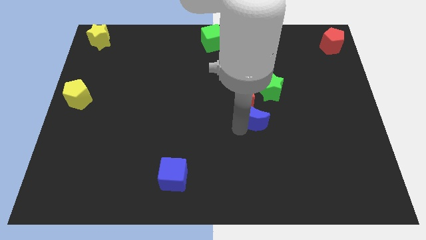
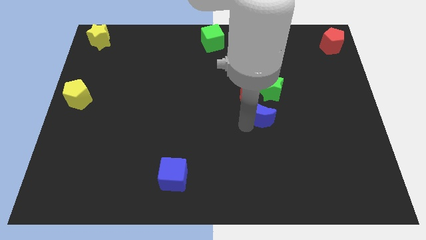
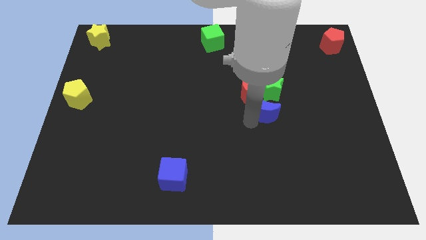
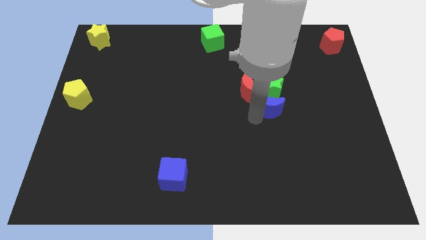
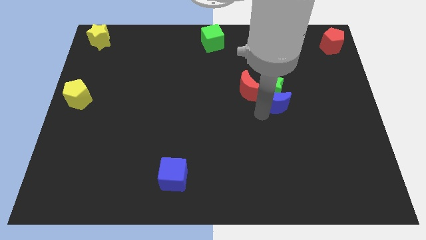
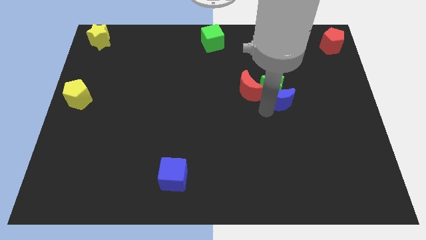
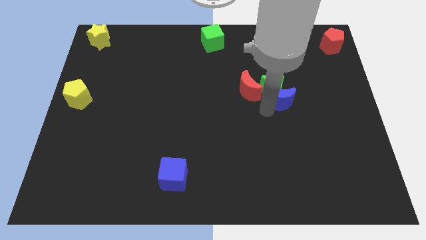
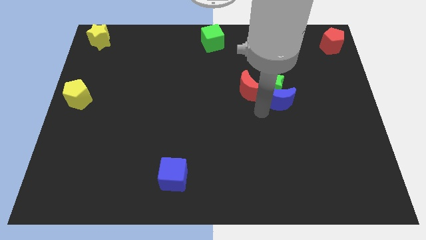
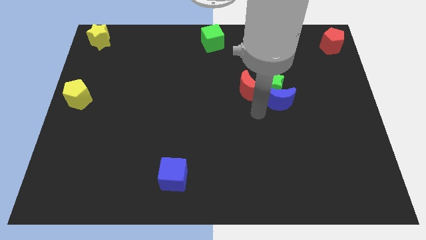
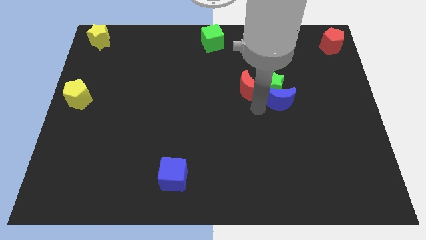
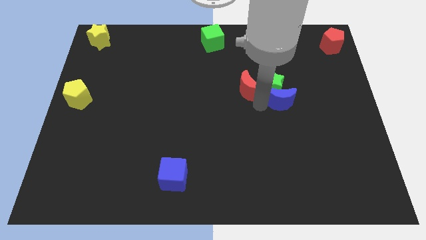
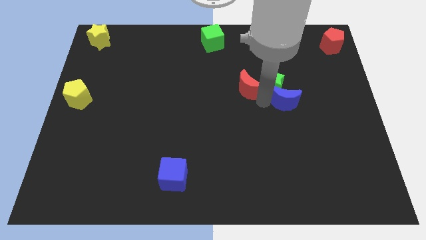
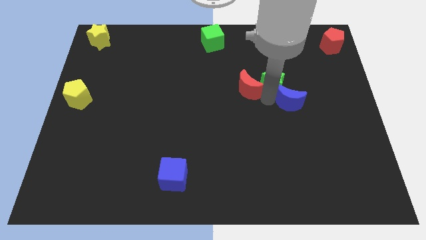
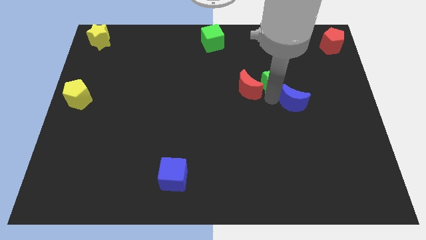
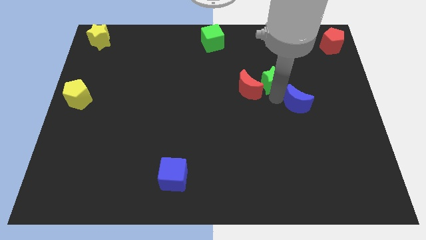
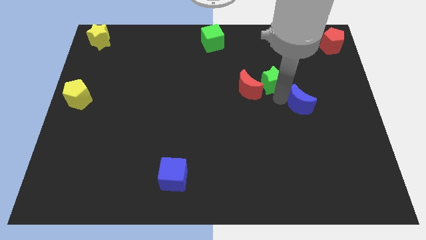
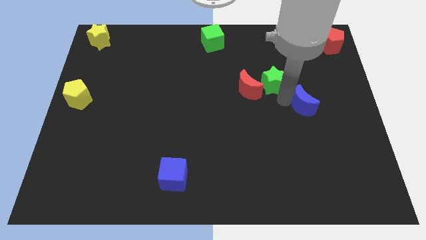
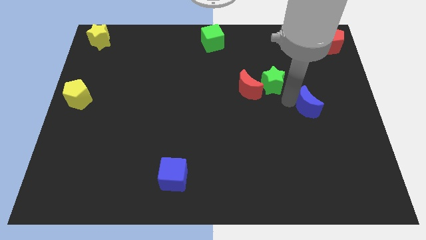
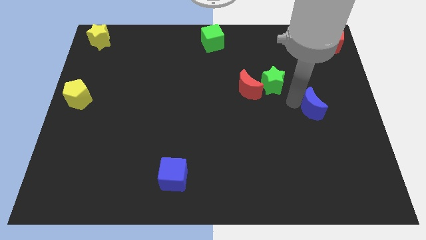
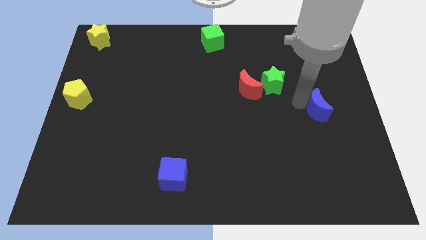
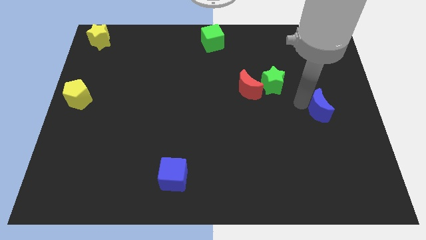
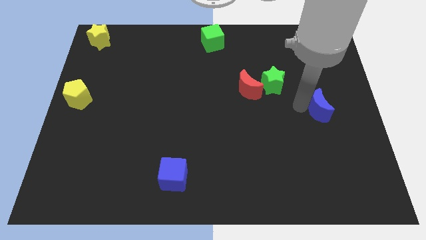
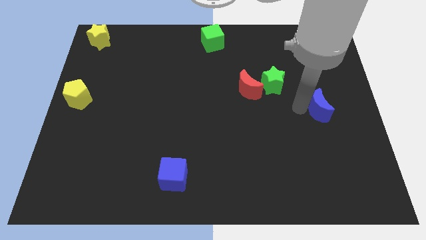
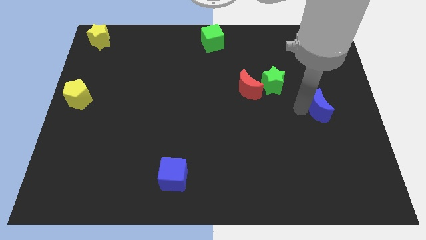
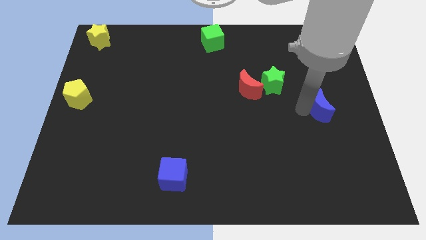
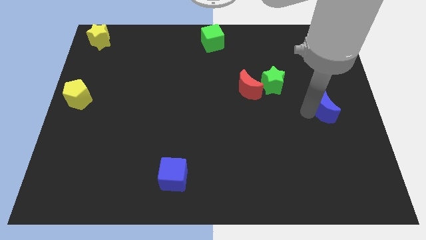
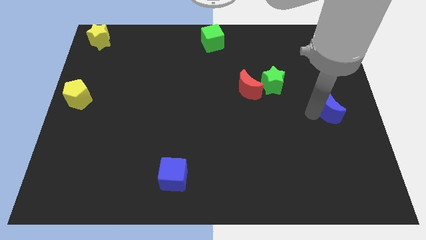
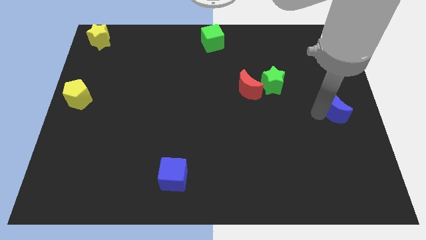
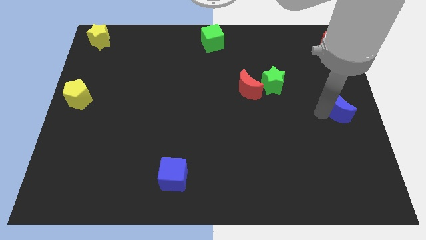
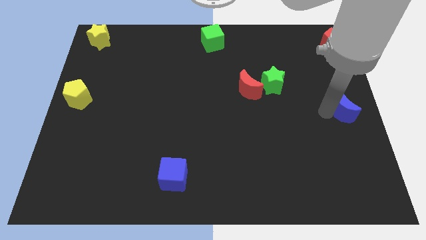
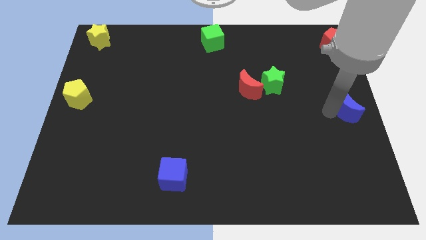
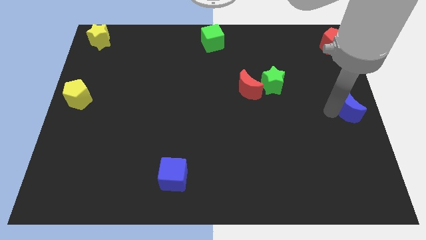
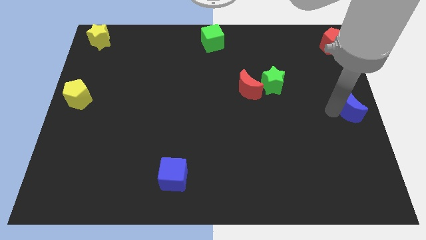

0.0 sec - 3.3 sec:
push the blue crescent to the right center of the board

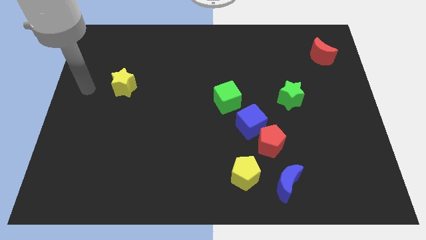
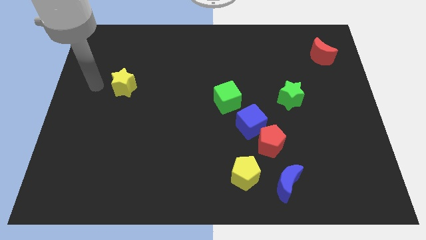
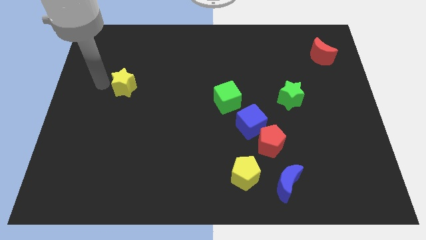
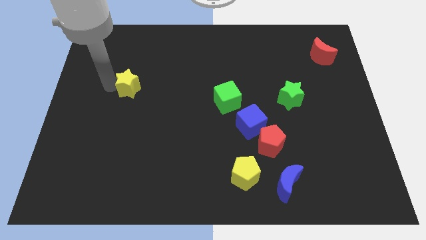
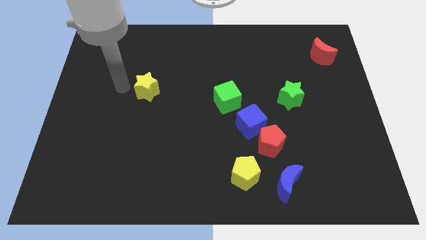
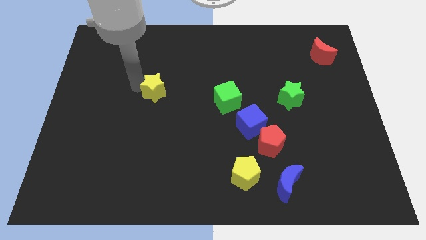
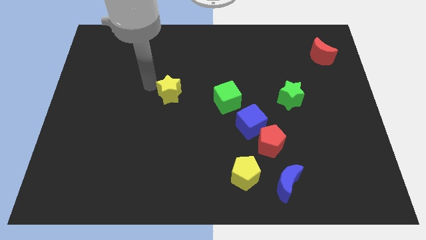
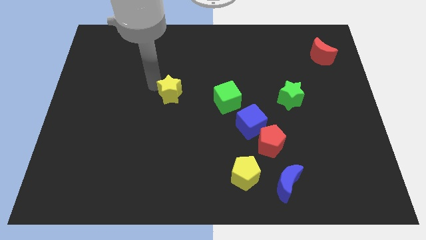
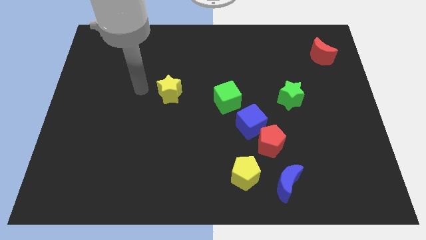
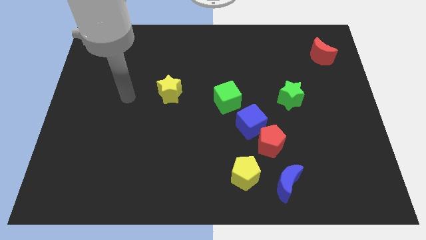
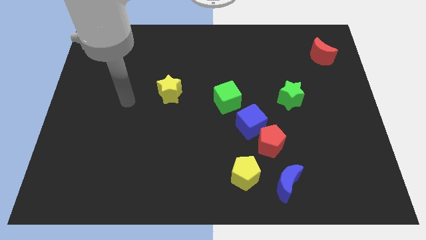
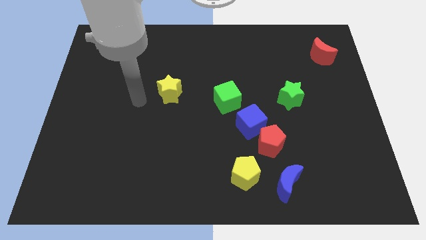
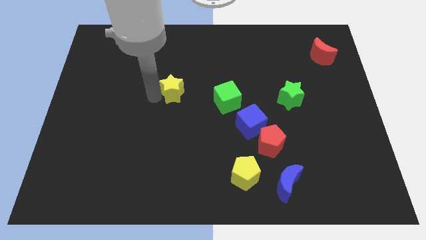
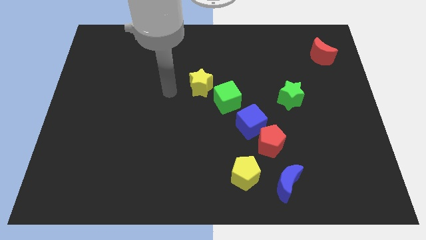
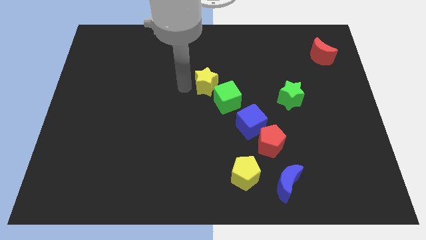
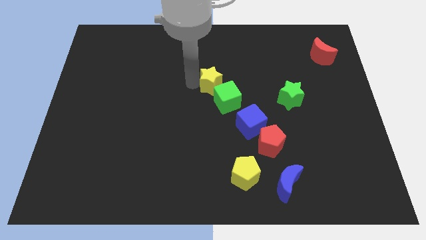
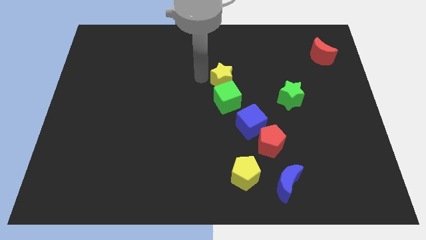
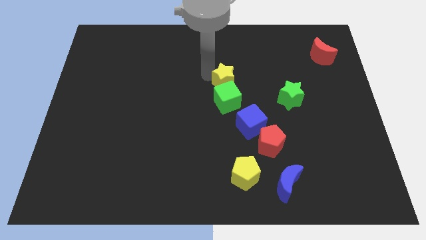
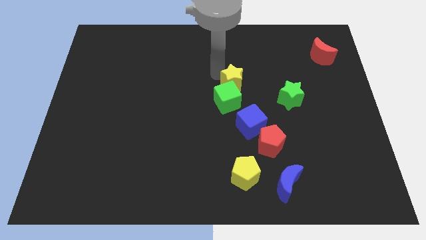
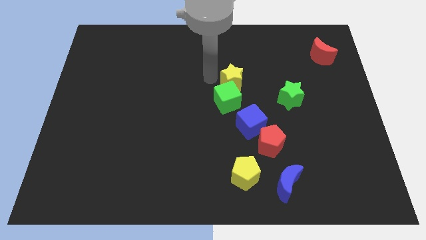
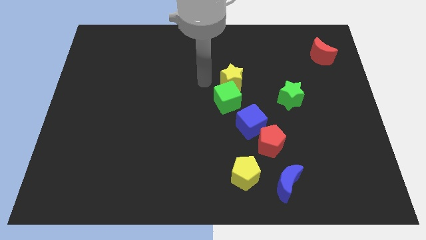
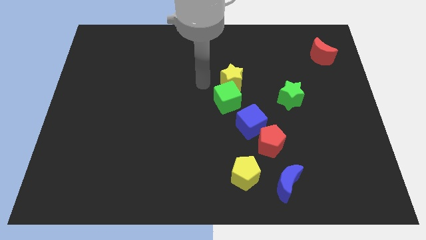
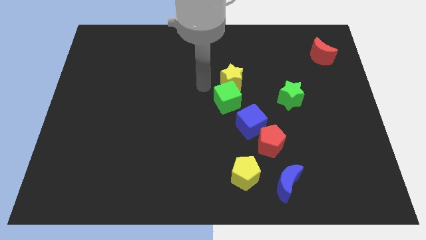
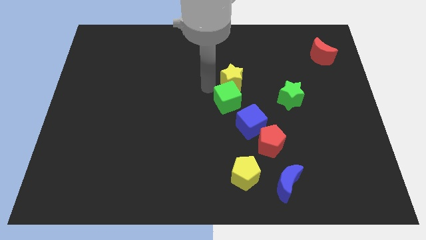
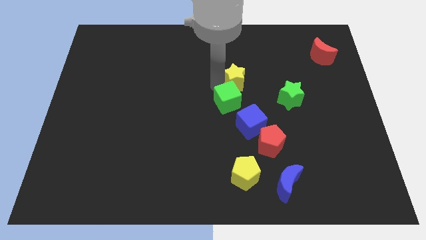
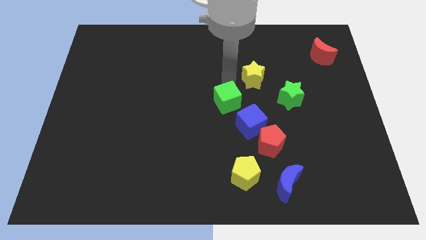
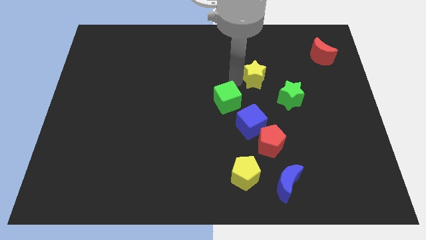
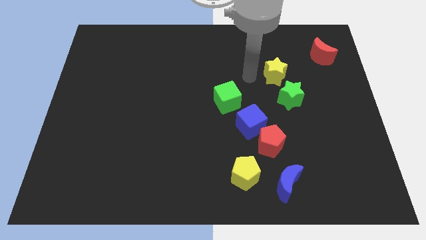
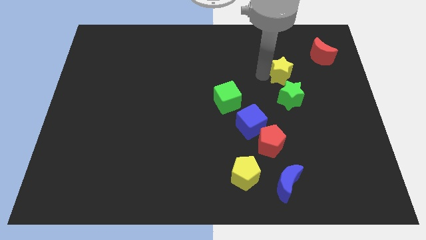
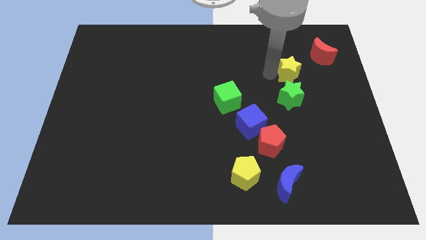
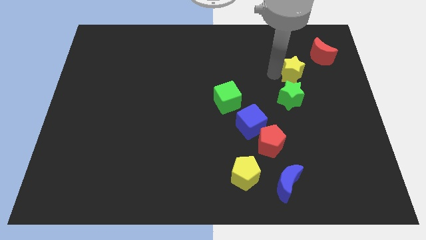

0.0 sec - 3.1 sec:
place yellow star above green star

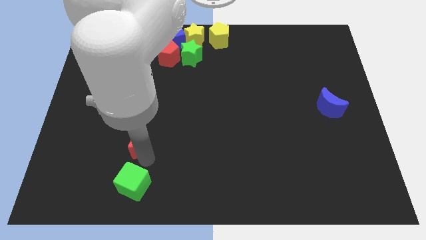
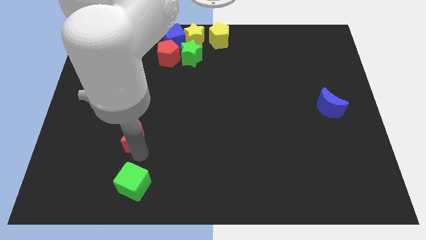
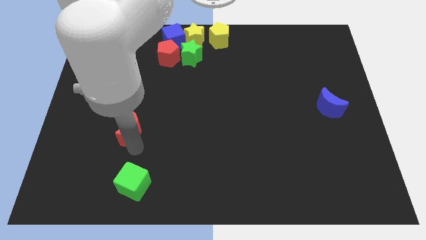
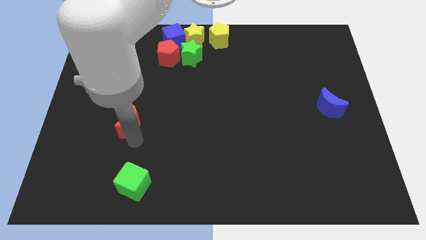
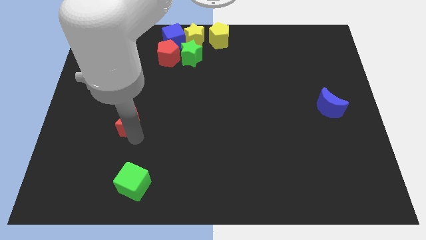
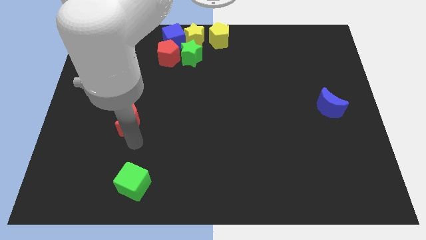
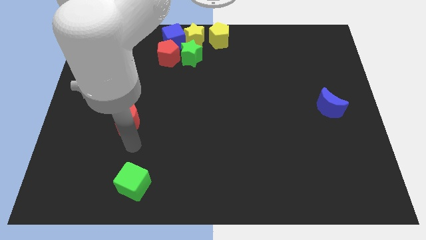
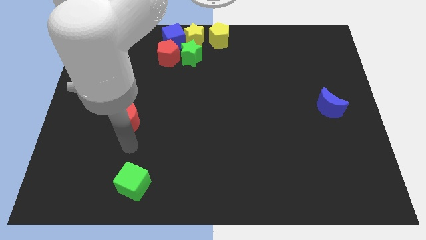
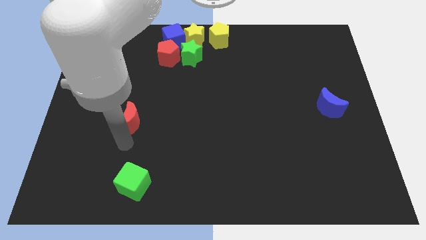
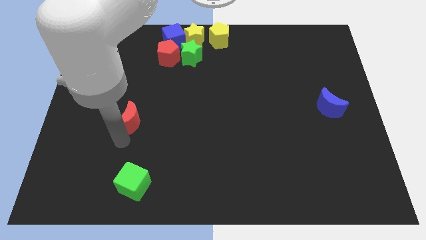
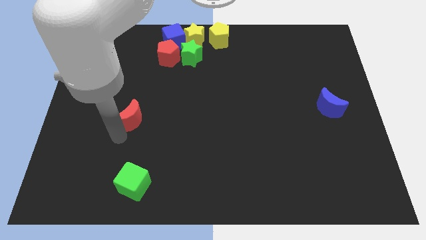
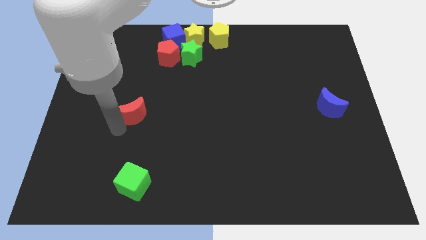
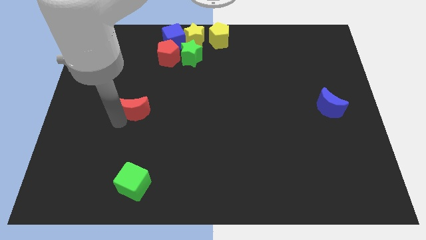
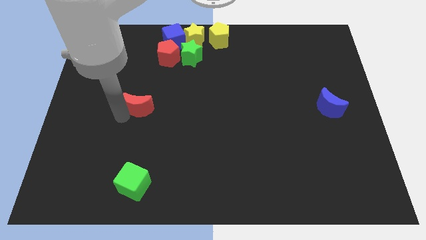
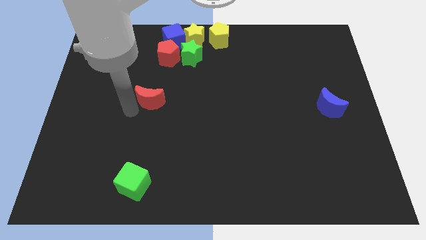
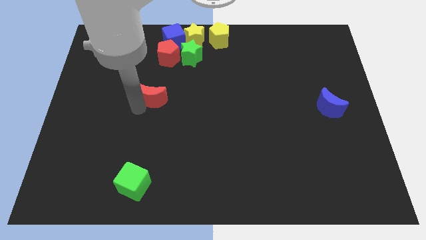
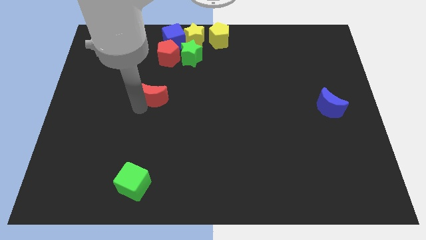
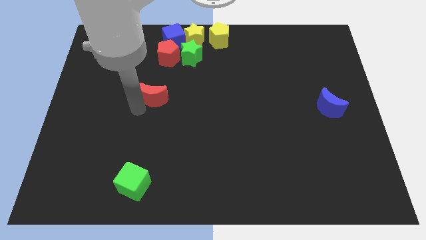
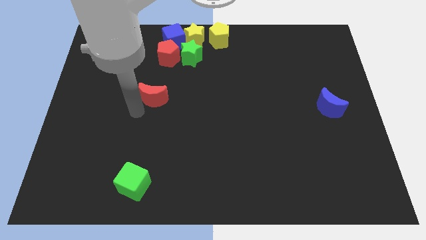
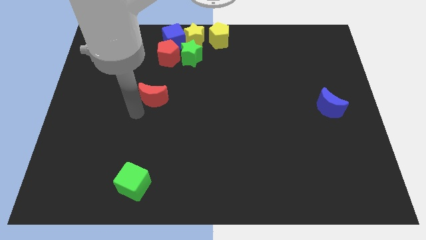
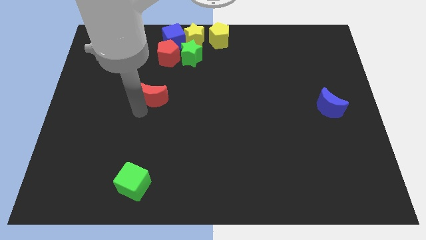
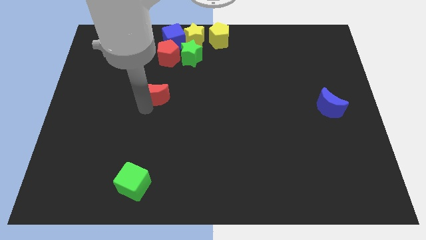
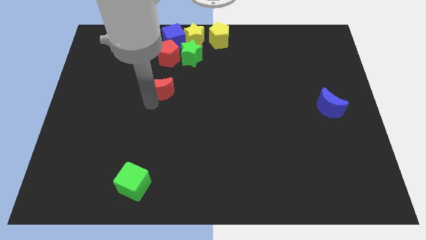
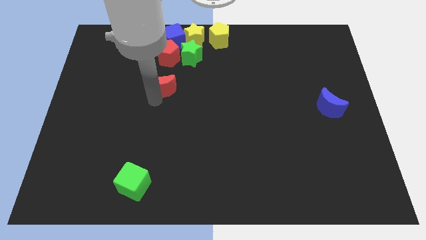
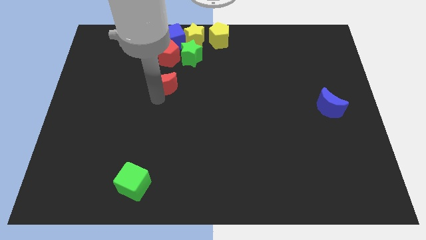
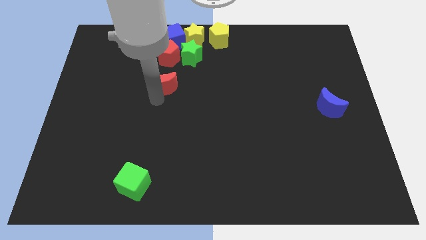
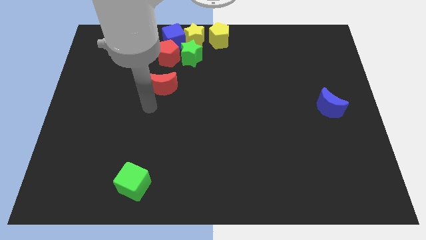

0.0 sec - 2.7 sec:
place the red moon down to the red pentagon
